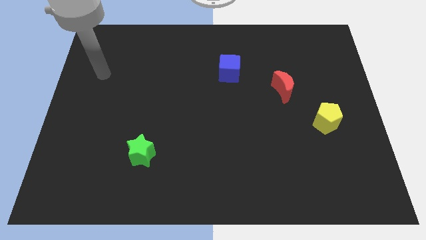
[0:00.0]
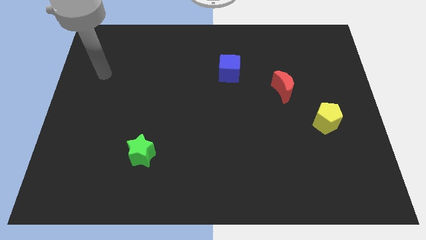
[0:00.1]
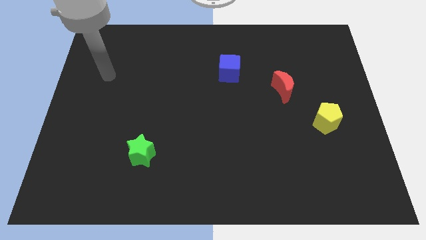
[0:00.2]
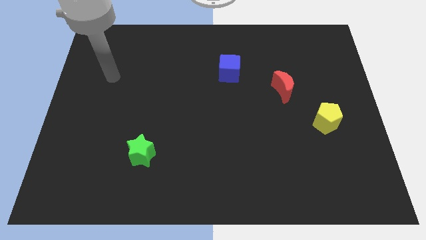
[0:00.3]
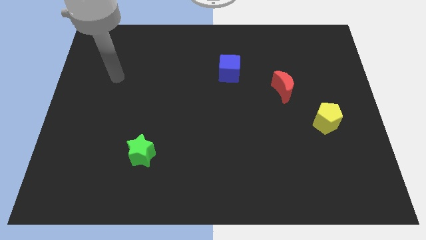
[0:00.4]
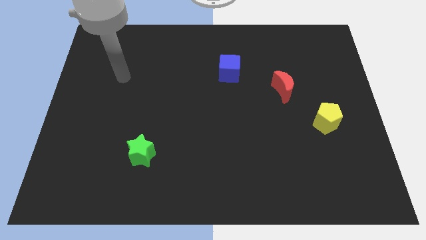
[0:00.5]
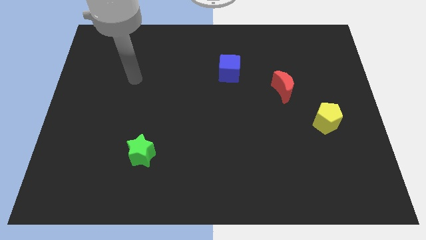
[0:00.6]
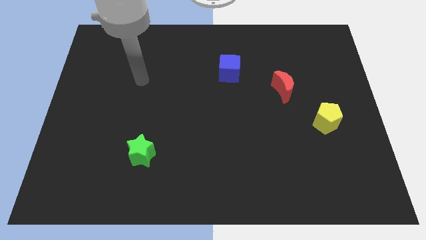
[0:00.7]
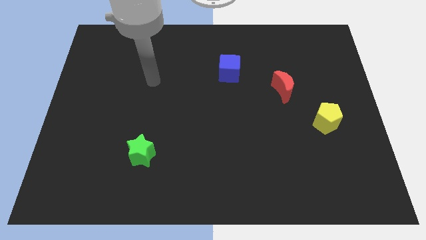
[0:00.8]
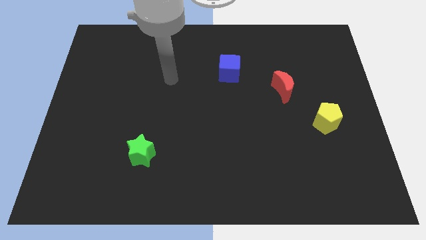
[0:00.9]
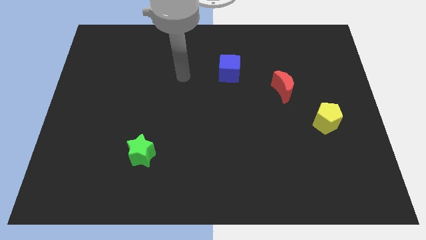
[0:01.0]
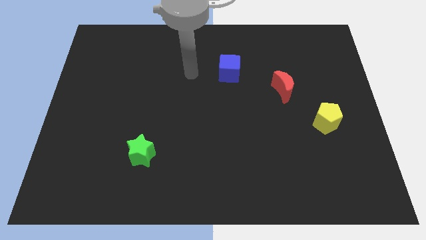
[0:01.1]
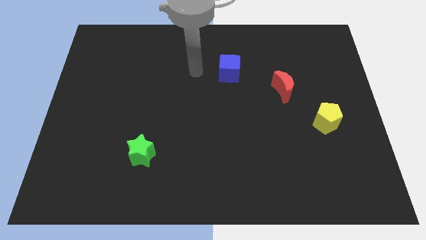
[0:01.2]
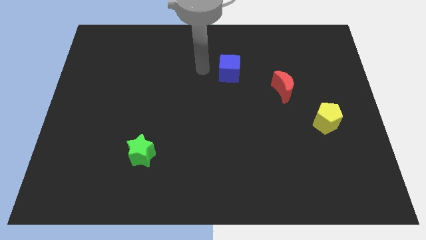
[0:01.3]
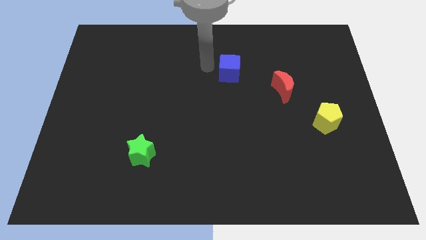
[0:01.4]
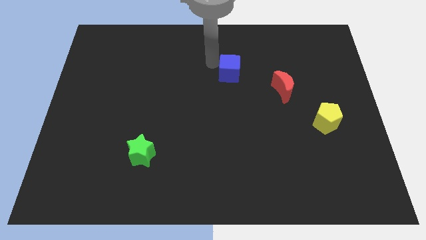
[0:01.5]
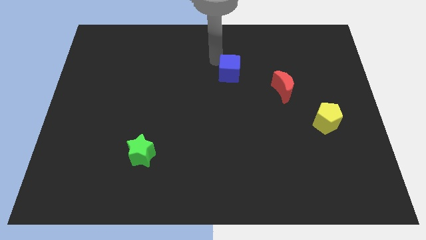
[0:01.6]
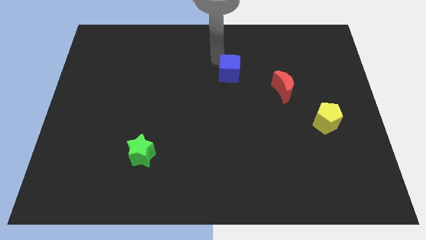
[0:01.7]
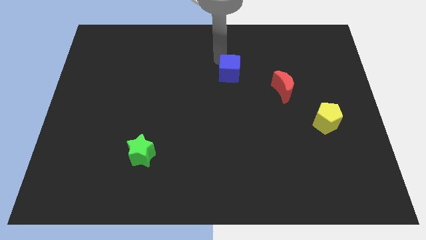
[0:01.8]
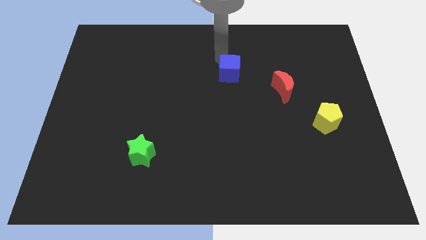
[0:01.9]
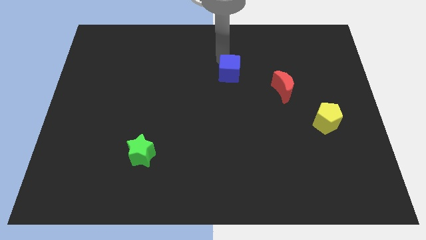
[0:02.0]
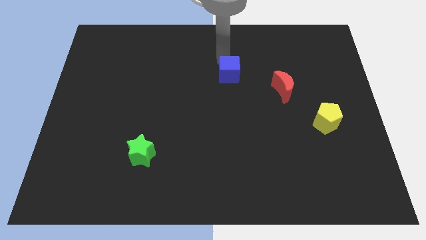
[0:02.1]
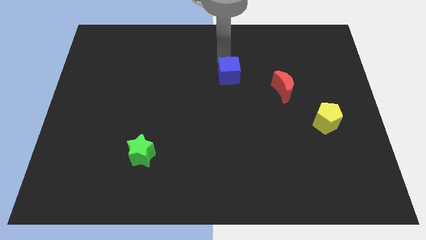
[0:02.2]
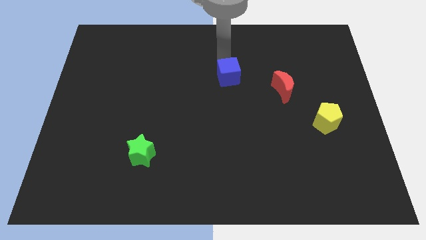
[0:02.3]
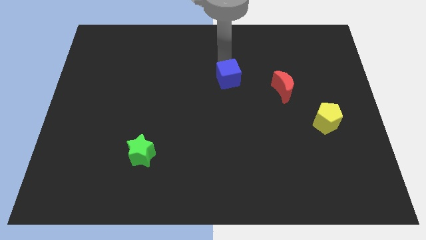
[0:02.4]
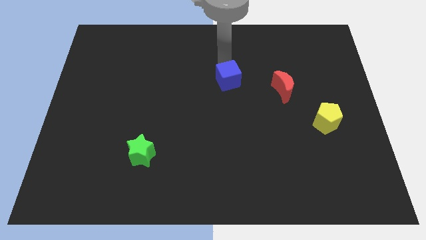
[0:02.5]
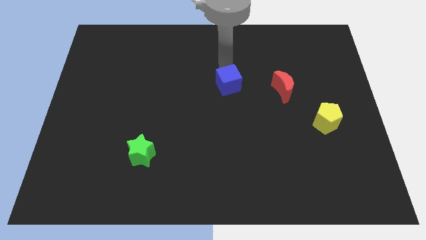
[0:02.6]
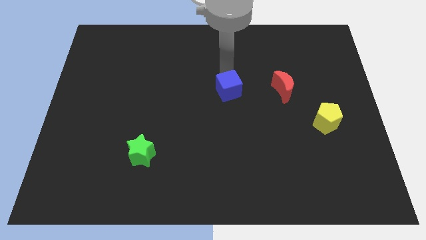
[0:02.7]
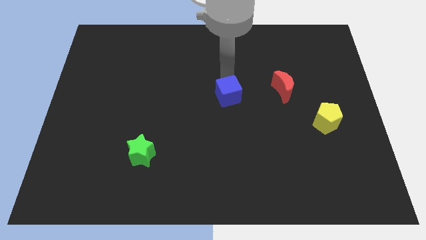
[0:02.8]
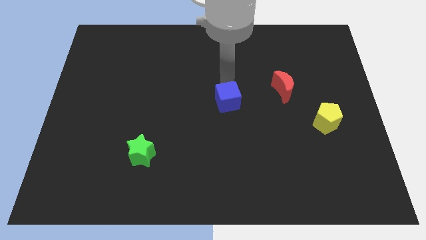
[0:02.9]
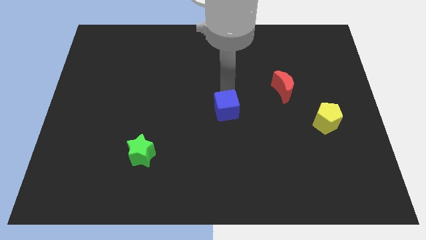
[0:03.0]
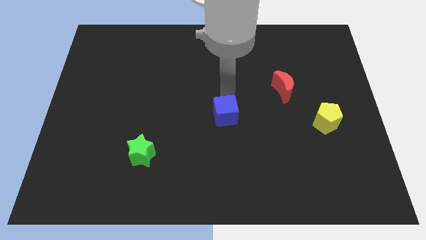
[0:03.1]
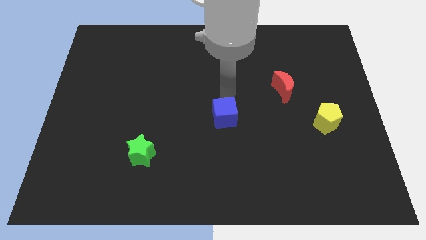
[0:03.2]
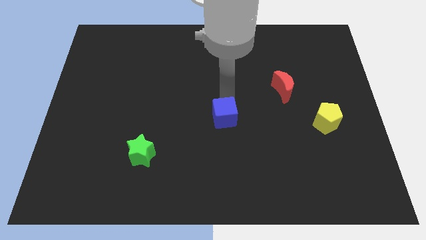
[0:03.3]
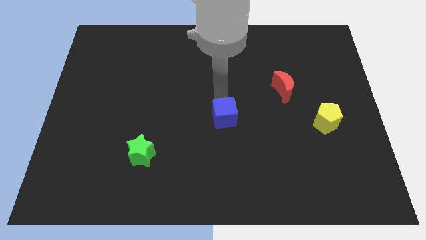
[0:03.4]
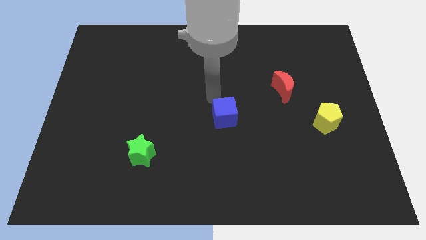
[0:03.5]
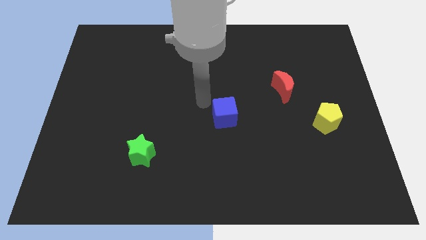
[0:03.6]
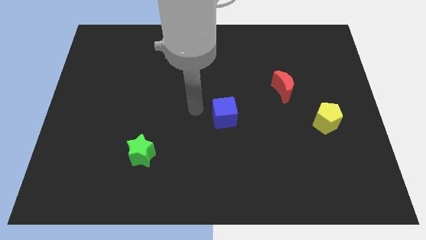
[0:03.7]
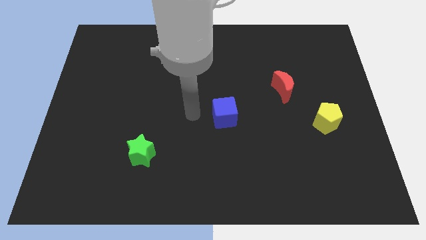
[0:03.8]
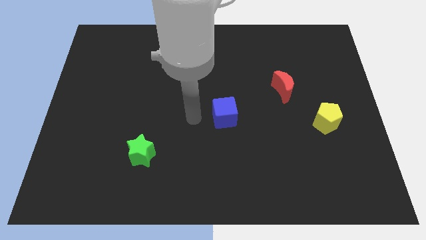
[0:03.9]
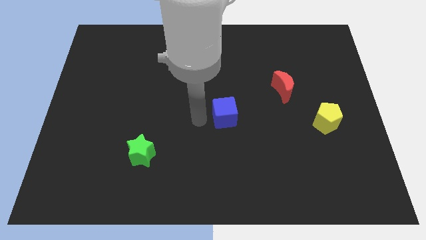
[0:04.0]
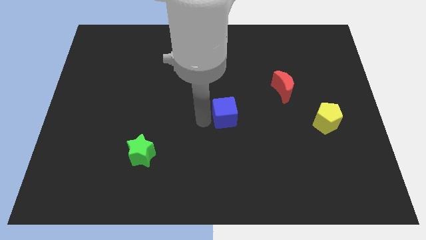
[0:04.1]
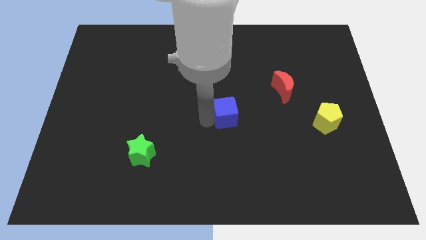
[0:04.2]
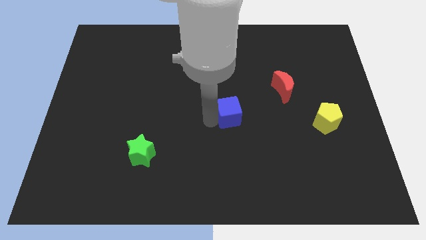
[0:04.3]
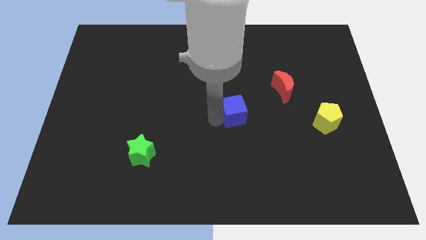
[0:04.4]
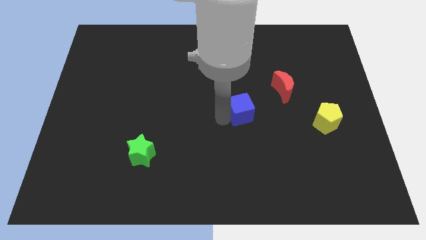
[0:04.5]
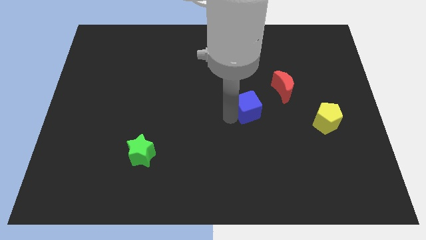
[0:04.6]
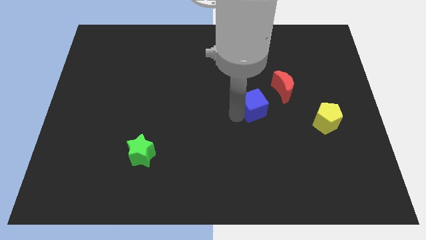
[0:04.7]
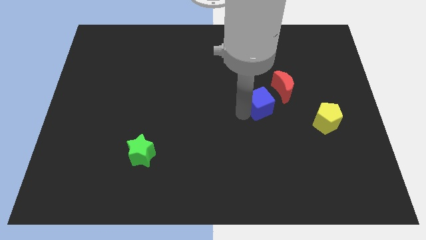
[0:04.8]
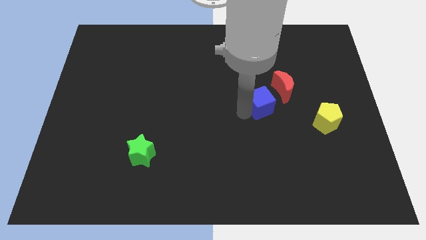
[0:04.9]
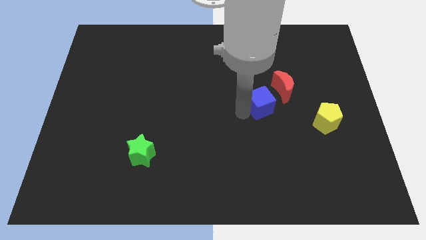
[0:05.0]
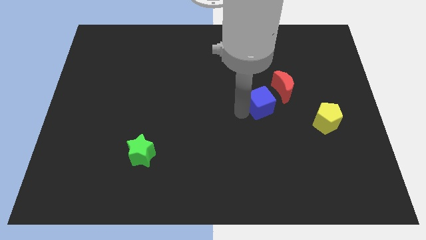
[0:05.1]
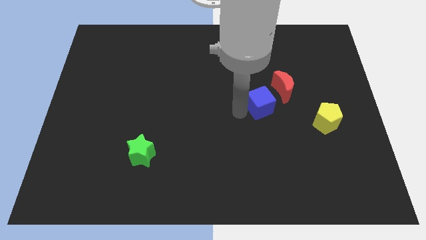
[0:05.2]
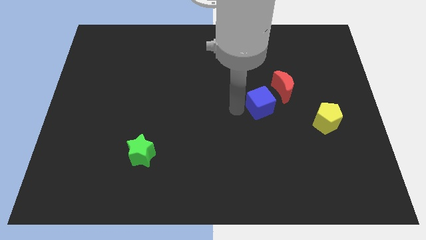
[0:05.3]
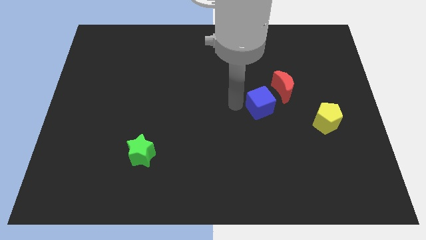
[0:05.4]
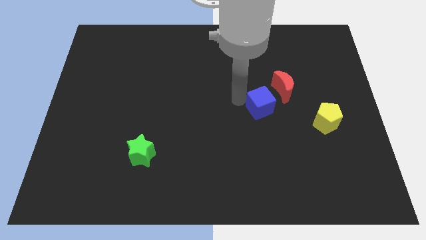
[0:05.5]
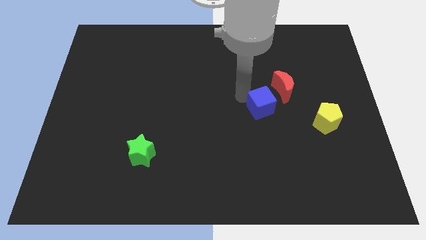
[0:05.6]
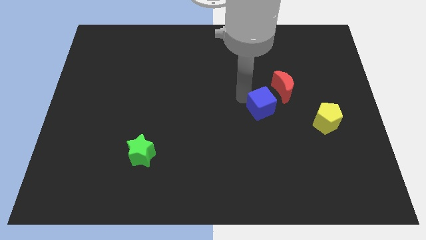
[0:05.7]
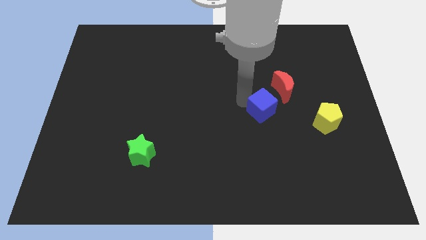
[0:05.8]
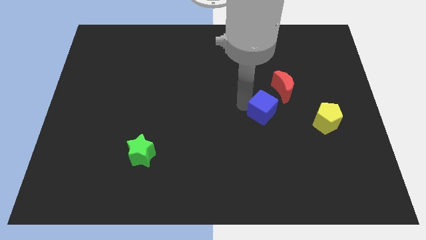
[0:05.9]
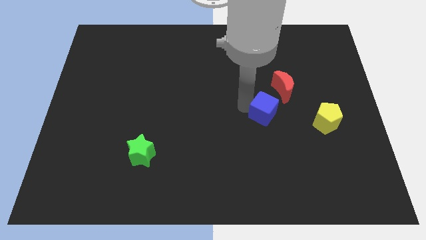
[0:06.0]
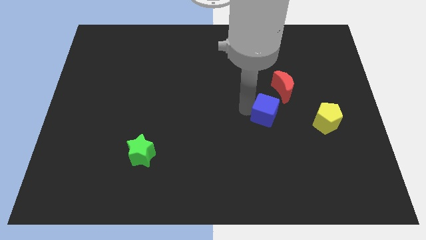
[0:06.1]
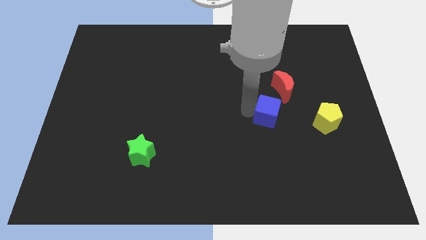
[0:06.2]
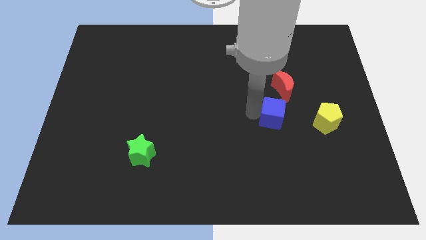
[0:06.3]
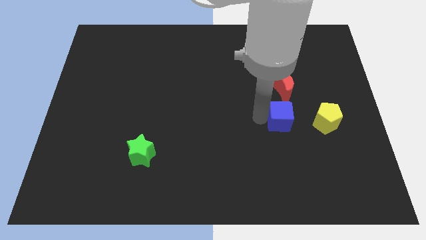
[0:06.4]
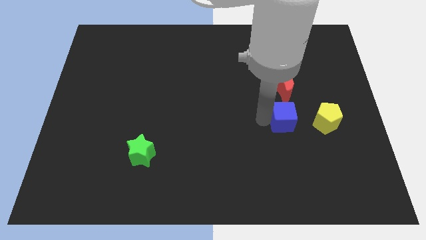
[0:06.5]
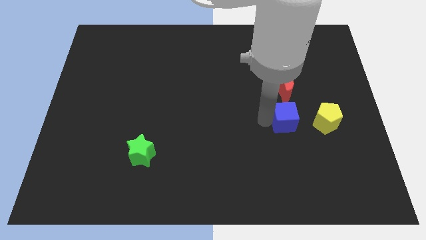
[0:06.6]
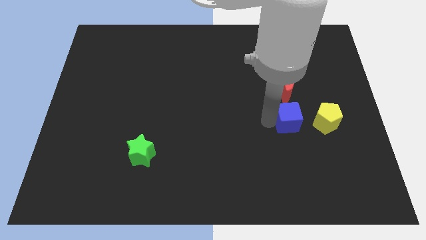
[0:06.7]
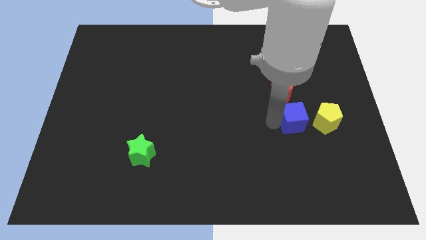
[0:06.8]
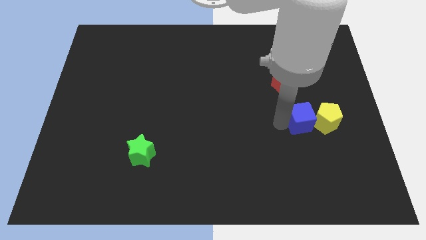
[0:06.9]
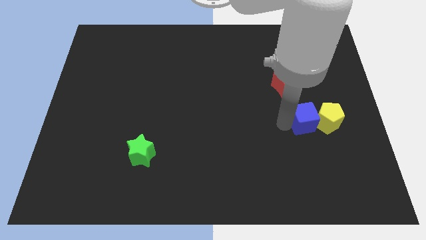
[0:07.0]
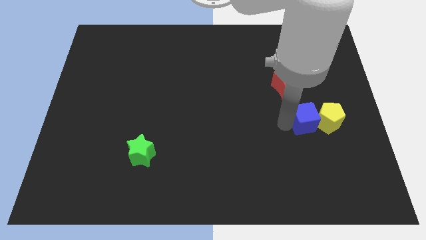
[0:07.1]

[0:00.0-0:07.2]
move the cube next to the yellow block

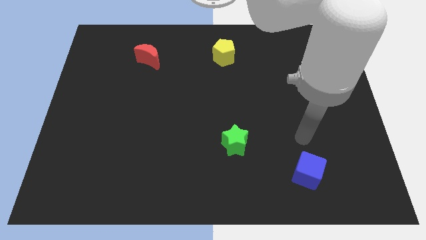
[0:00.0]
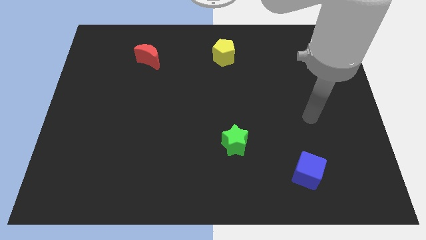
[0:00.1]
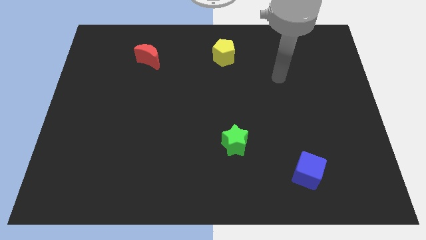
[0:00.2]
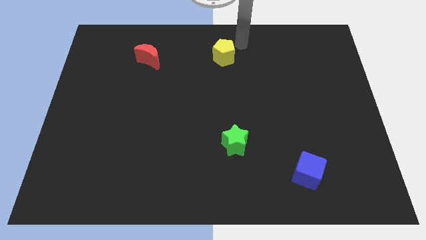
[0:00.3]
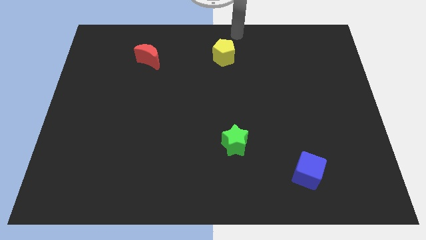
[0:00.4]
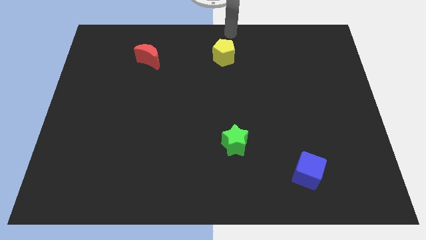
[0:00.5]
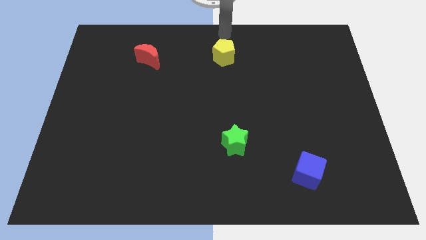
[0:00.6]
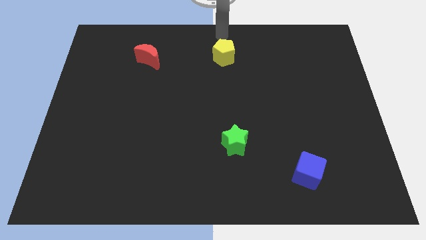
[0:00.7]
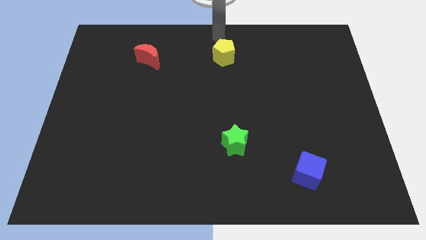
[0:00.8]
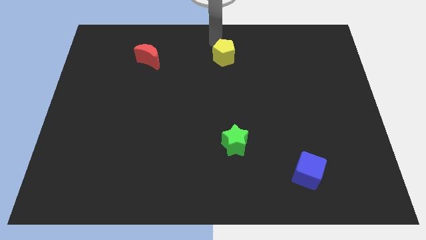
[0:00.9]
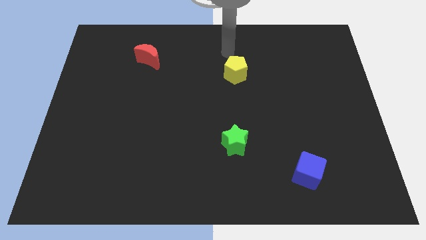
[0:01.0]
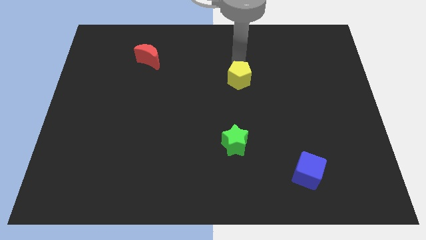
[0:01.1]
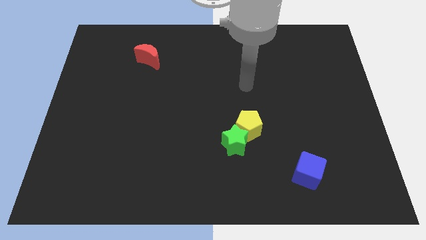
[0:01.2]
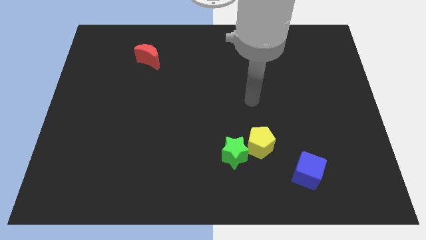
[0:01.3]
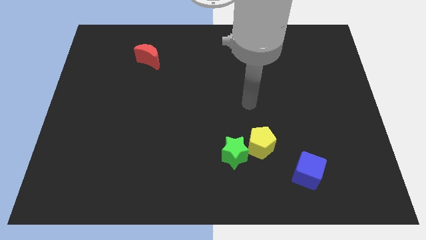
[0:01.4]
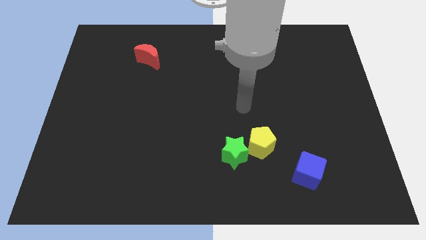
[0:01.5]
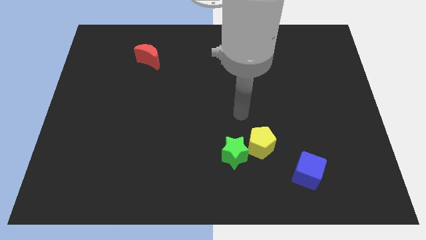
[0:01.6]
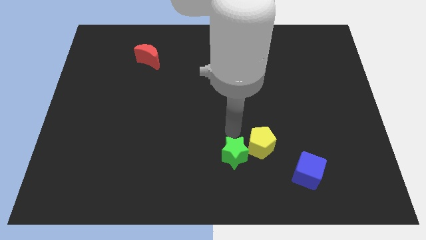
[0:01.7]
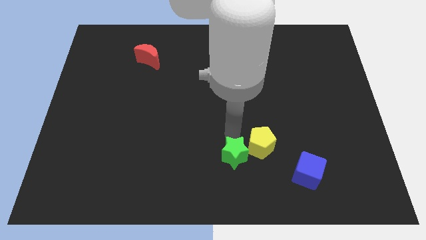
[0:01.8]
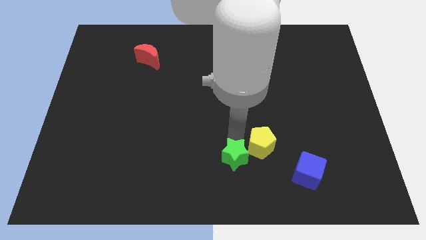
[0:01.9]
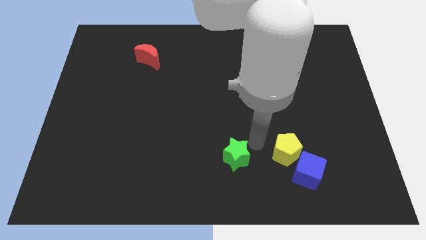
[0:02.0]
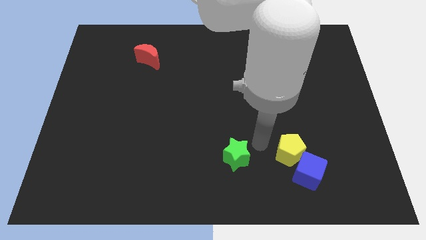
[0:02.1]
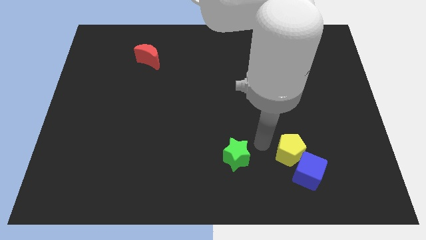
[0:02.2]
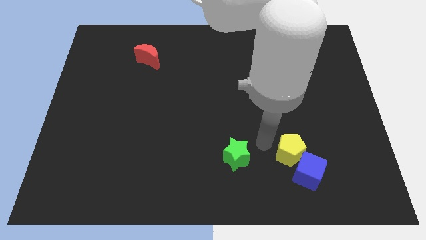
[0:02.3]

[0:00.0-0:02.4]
slide the yellow pentagon to the blue block
